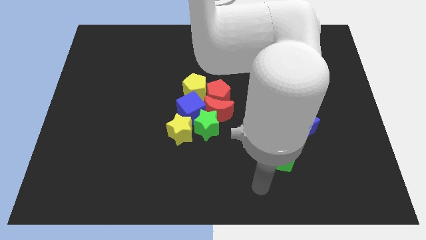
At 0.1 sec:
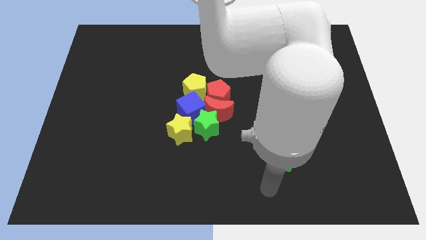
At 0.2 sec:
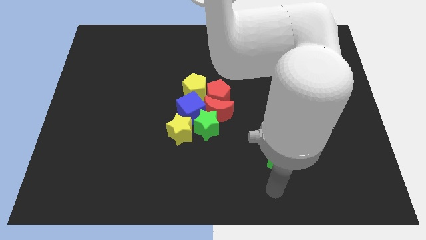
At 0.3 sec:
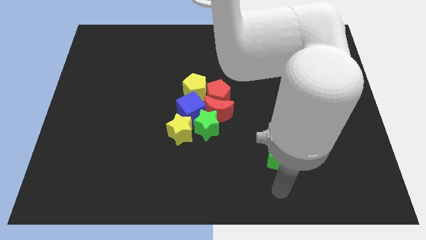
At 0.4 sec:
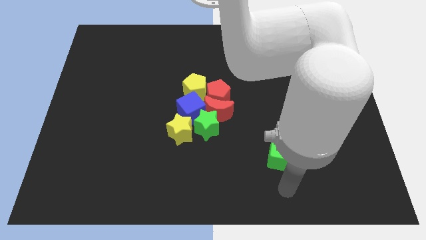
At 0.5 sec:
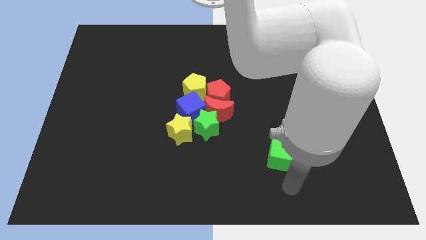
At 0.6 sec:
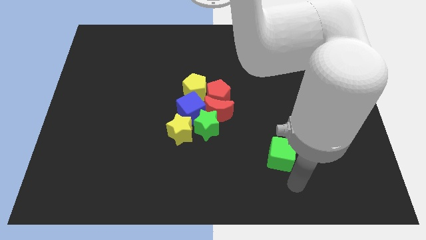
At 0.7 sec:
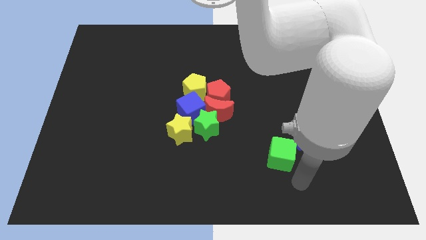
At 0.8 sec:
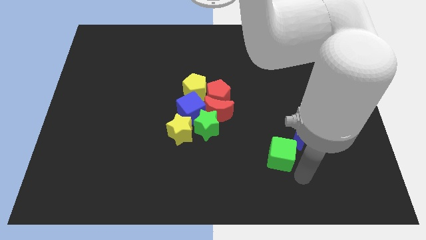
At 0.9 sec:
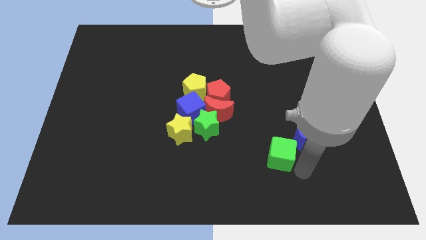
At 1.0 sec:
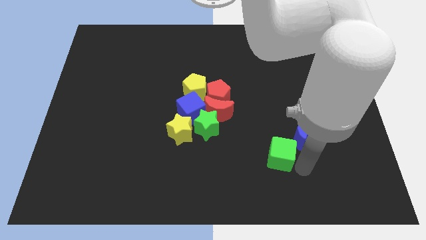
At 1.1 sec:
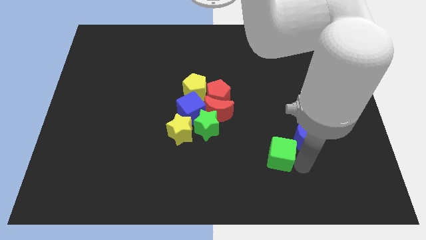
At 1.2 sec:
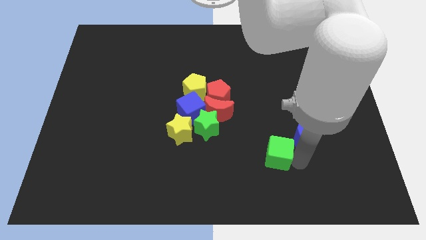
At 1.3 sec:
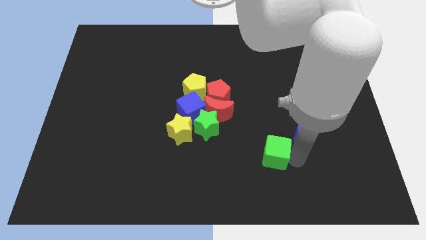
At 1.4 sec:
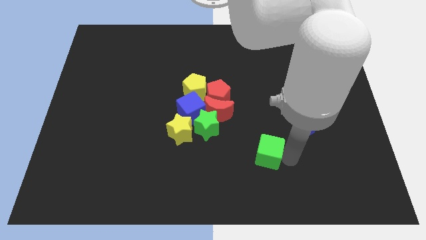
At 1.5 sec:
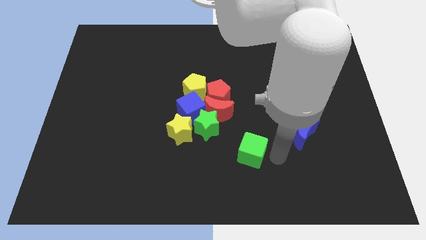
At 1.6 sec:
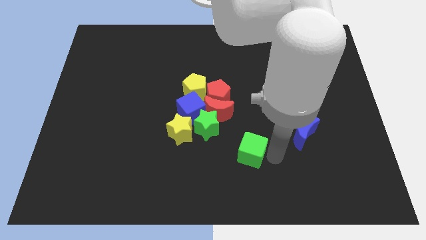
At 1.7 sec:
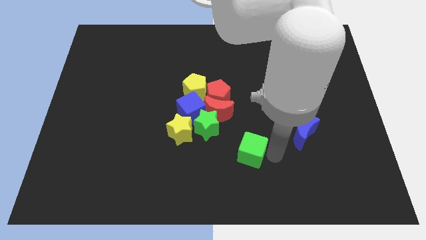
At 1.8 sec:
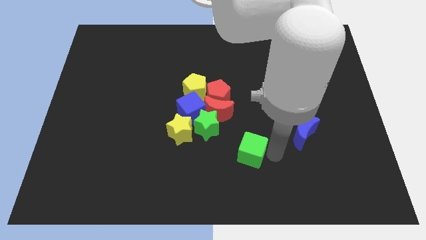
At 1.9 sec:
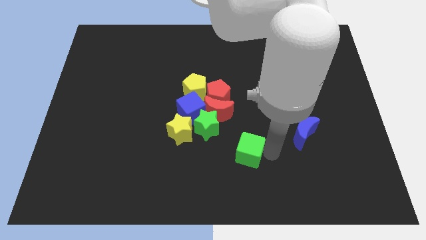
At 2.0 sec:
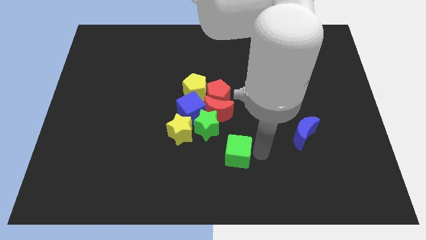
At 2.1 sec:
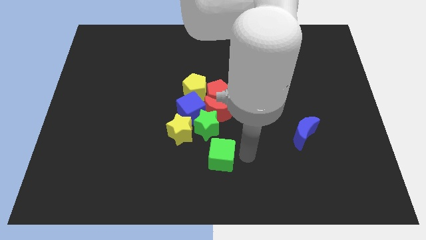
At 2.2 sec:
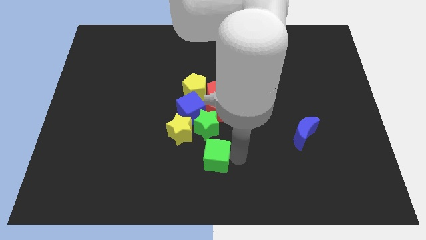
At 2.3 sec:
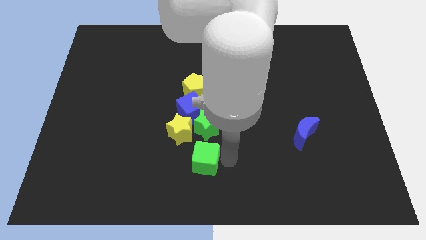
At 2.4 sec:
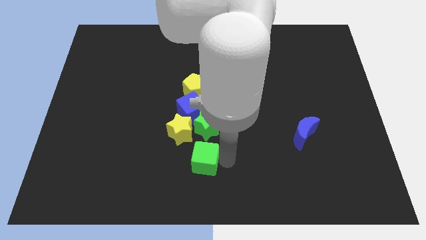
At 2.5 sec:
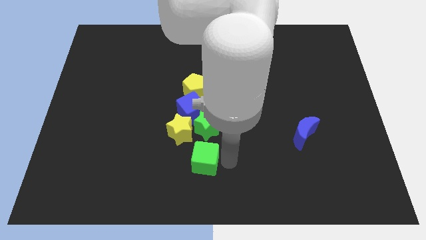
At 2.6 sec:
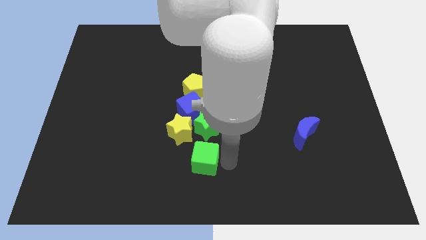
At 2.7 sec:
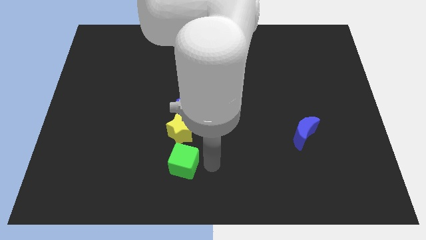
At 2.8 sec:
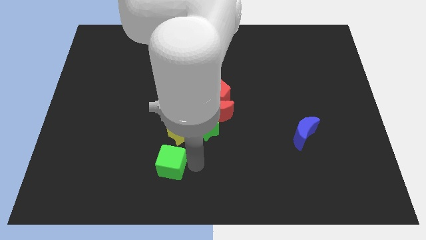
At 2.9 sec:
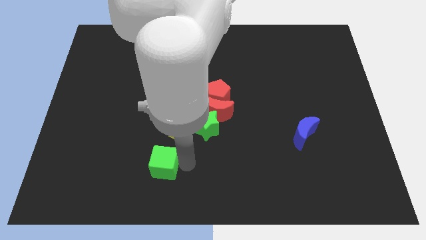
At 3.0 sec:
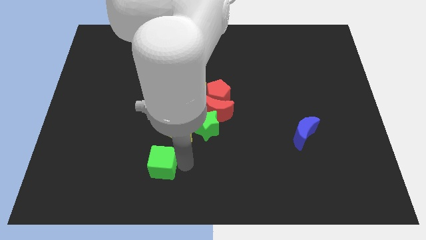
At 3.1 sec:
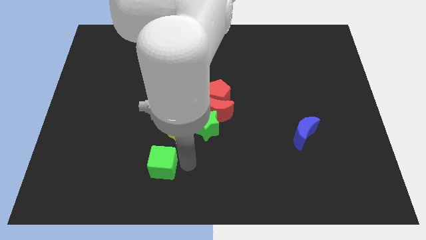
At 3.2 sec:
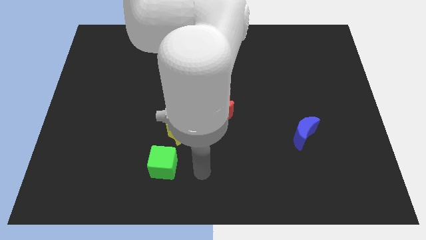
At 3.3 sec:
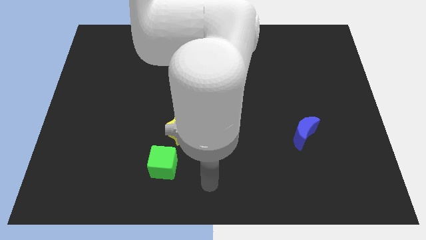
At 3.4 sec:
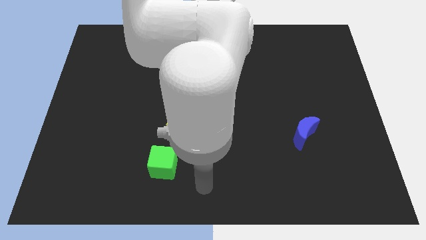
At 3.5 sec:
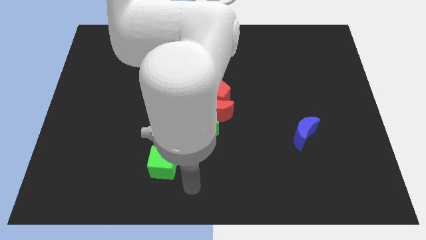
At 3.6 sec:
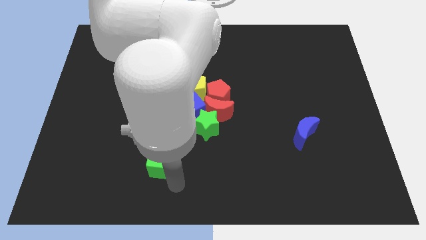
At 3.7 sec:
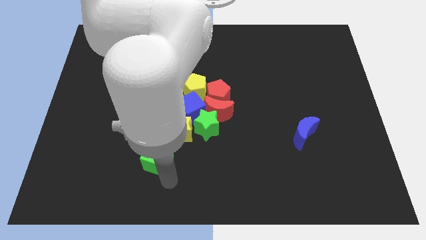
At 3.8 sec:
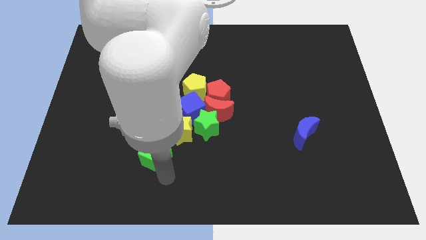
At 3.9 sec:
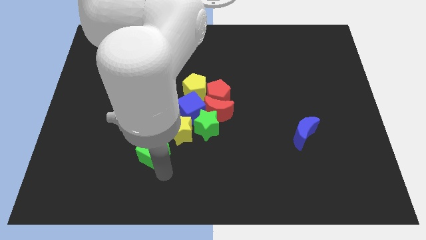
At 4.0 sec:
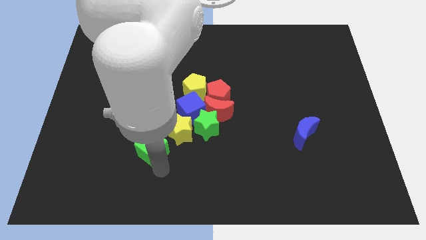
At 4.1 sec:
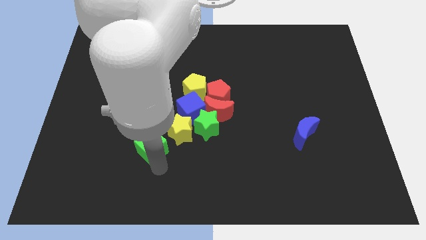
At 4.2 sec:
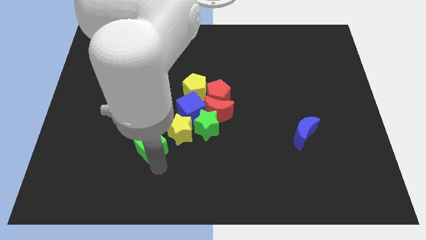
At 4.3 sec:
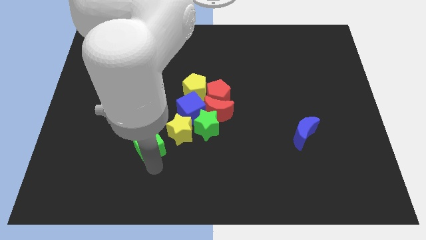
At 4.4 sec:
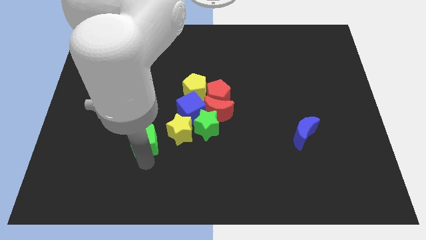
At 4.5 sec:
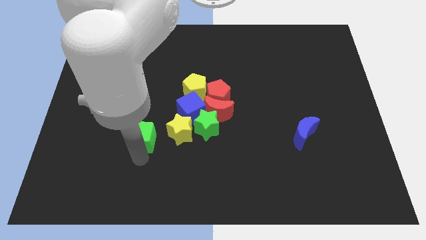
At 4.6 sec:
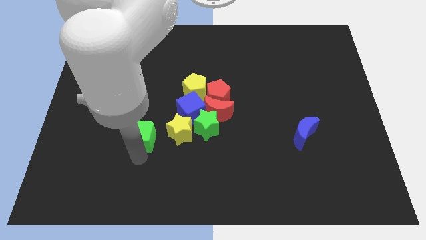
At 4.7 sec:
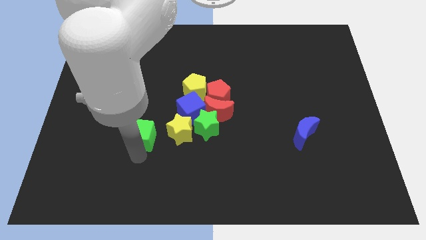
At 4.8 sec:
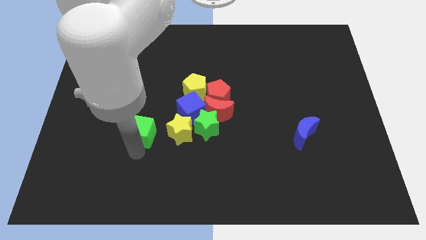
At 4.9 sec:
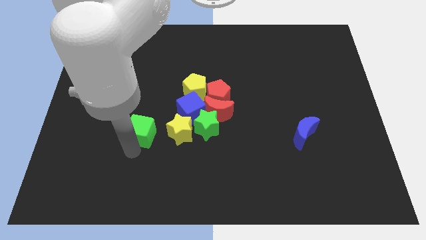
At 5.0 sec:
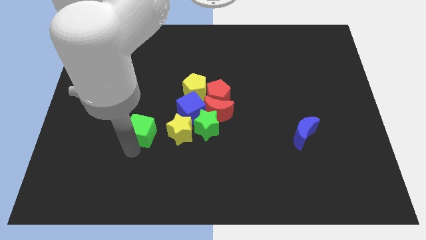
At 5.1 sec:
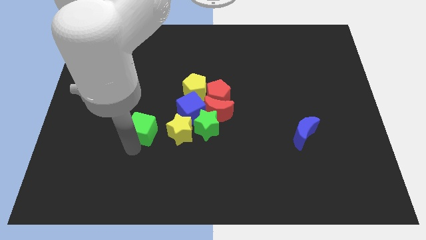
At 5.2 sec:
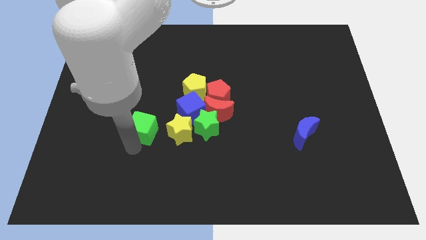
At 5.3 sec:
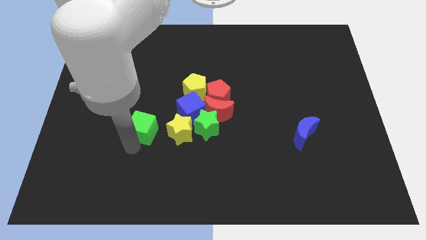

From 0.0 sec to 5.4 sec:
push the green cube to the left of the yellow star

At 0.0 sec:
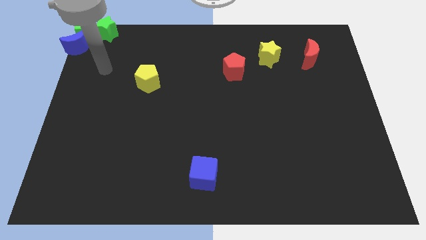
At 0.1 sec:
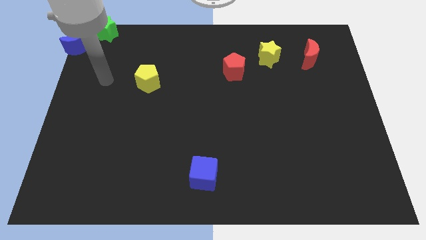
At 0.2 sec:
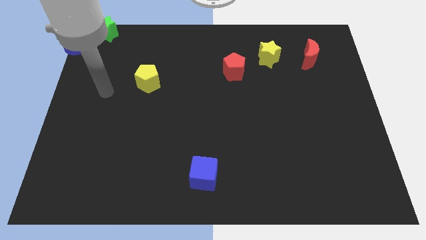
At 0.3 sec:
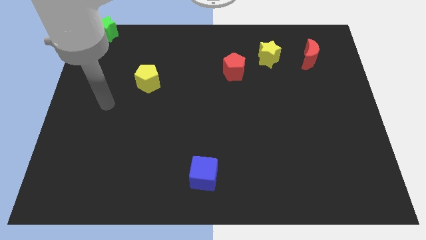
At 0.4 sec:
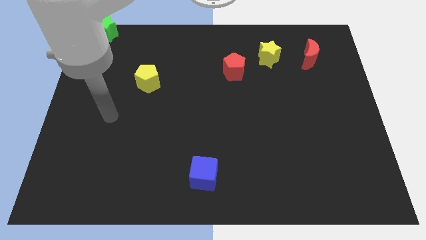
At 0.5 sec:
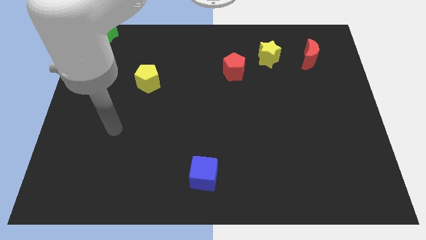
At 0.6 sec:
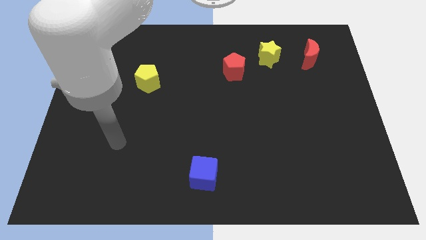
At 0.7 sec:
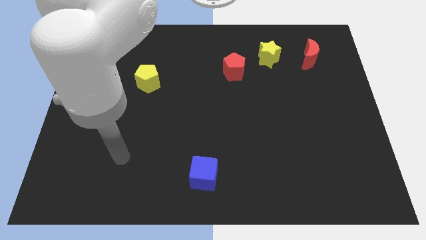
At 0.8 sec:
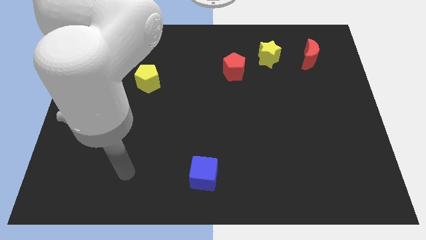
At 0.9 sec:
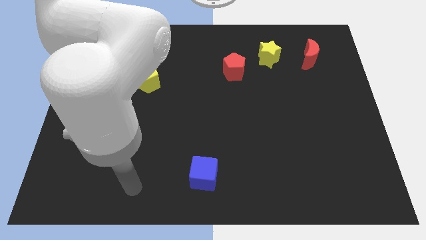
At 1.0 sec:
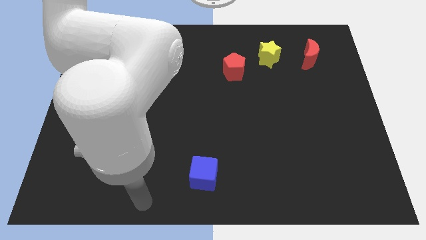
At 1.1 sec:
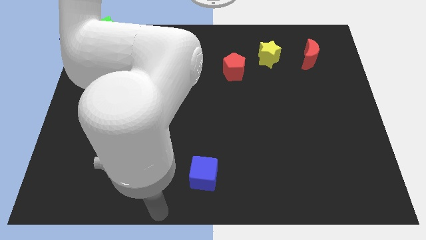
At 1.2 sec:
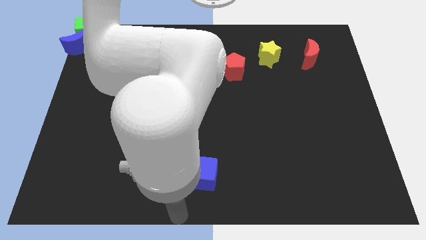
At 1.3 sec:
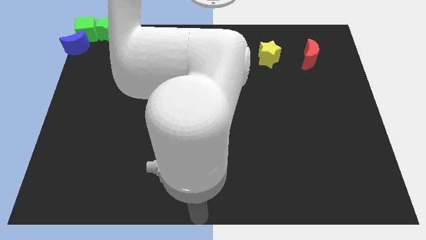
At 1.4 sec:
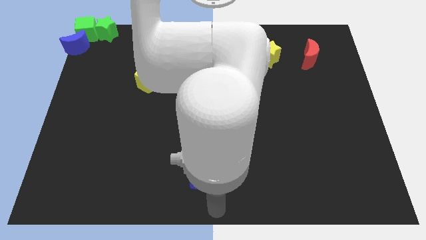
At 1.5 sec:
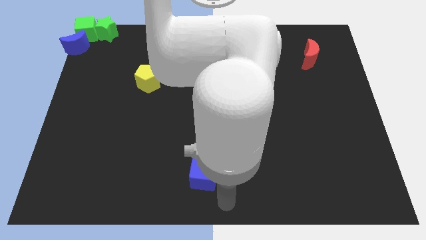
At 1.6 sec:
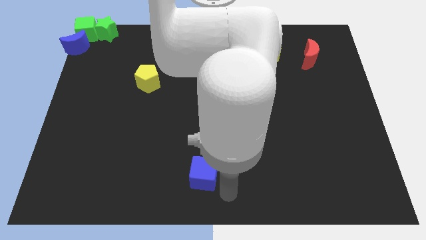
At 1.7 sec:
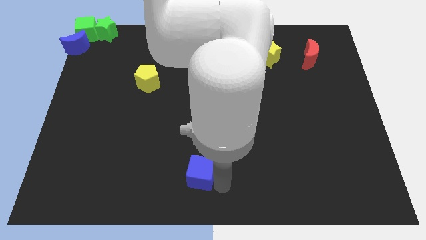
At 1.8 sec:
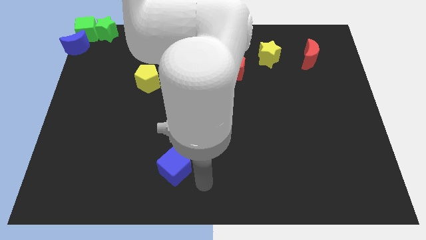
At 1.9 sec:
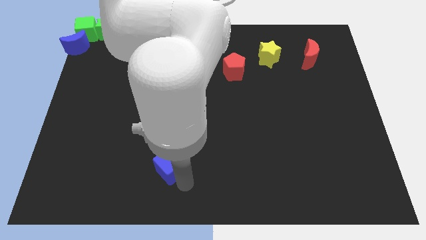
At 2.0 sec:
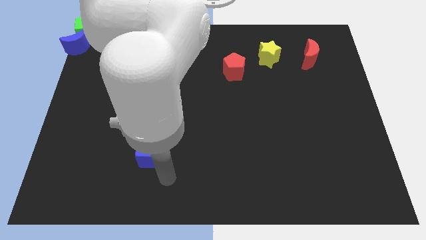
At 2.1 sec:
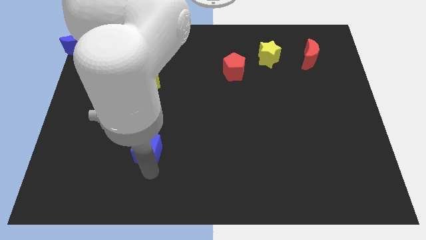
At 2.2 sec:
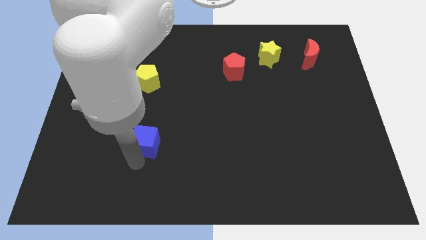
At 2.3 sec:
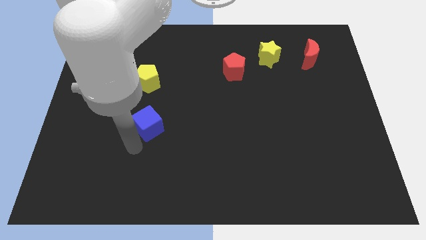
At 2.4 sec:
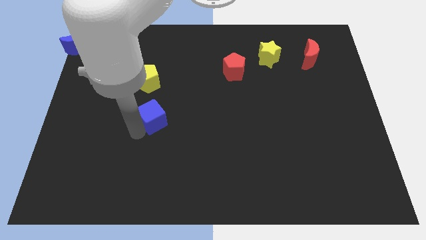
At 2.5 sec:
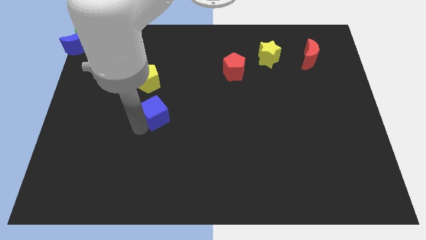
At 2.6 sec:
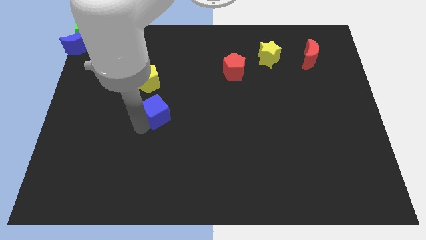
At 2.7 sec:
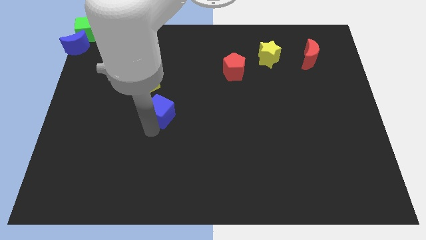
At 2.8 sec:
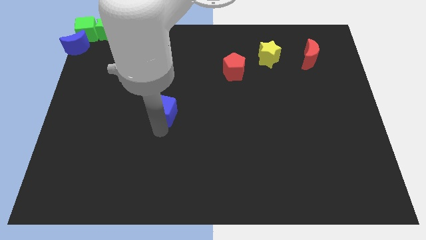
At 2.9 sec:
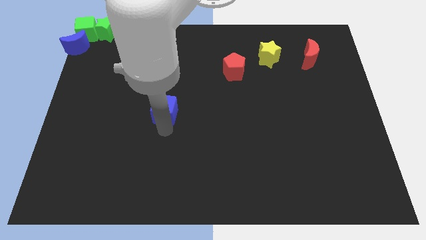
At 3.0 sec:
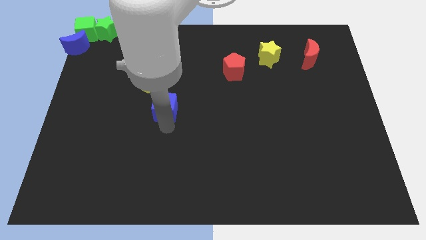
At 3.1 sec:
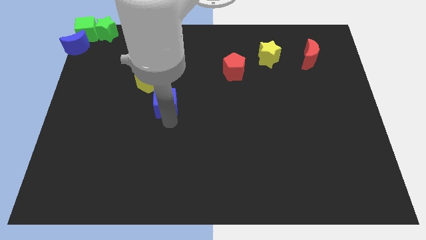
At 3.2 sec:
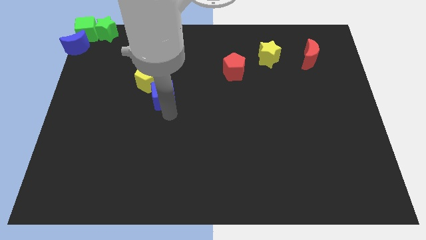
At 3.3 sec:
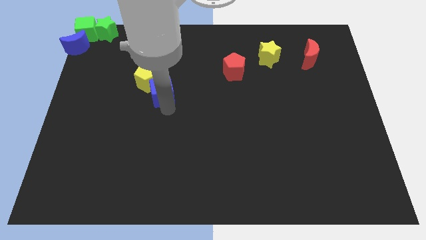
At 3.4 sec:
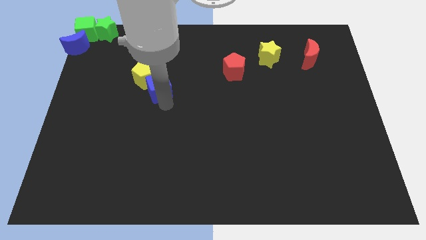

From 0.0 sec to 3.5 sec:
push the blue cube into the yellow pentagon
